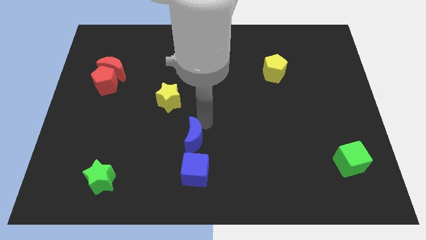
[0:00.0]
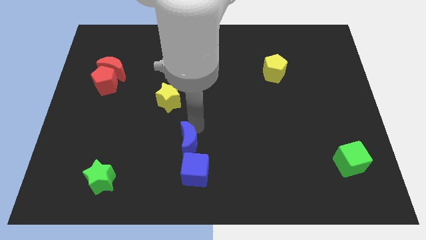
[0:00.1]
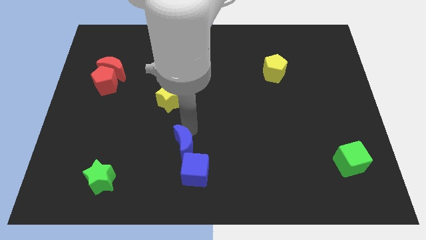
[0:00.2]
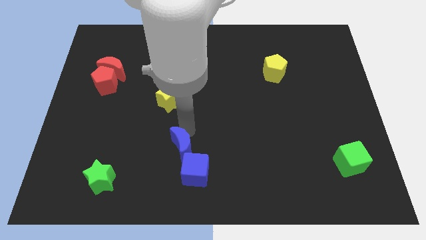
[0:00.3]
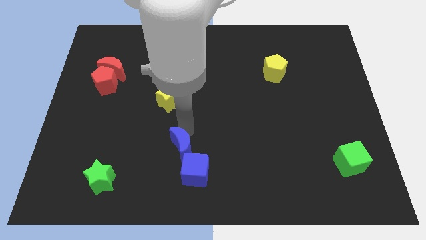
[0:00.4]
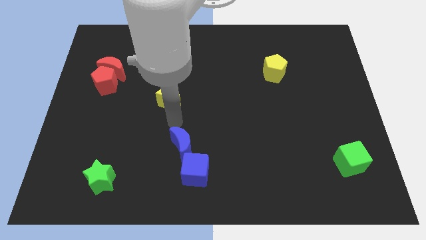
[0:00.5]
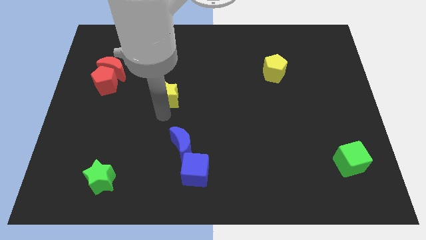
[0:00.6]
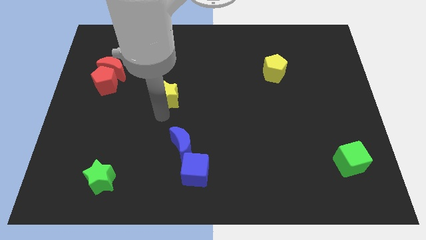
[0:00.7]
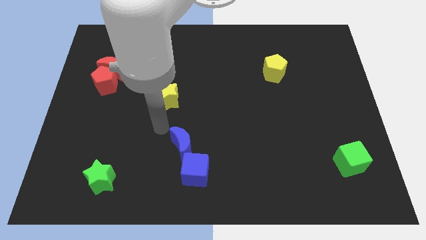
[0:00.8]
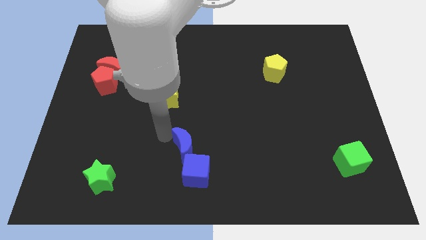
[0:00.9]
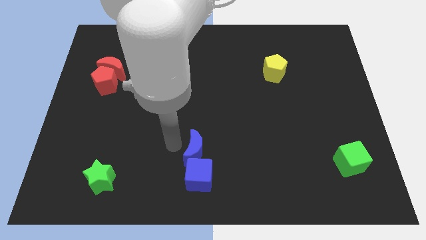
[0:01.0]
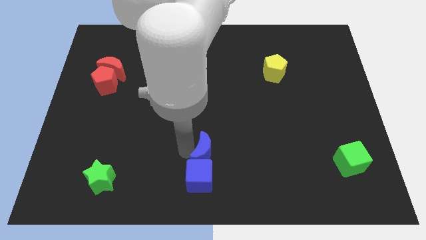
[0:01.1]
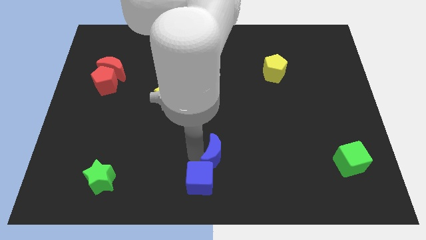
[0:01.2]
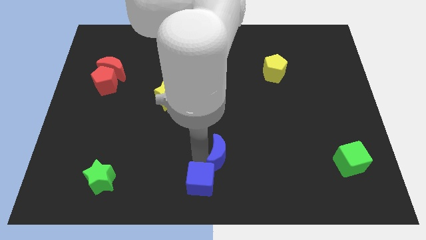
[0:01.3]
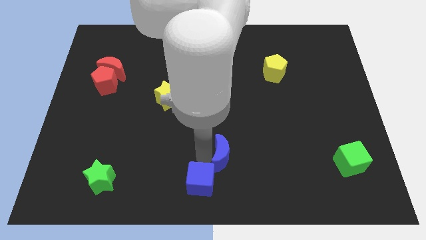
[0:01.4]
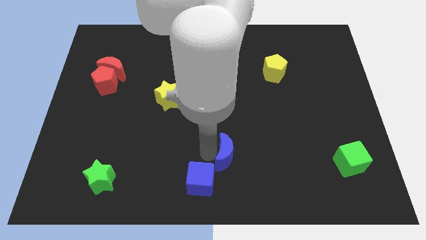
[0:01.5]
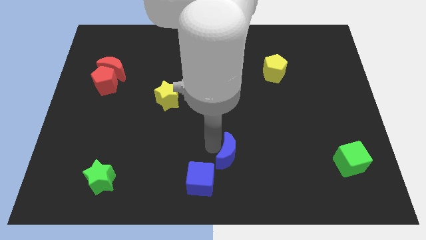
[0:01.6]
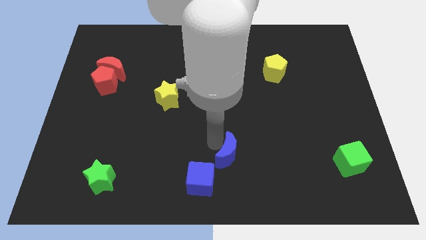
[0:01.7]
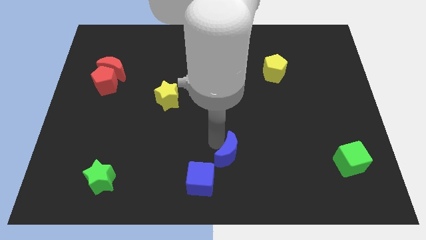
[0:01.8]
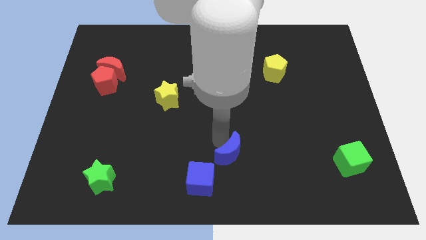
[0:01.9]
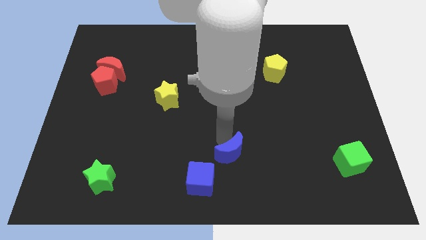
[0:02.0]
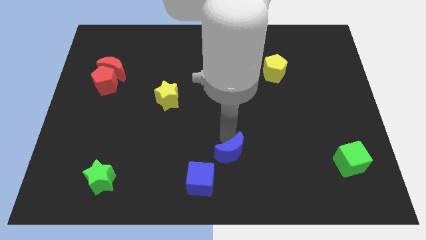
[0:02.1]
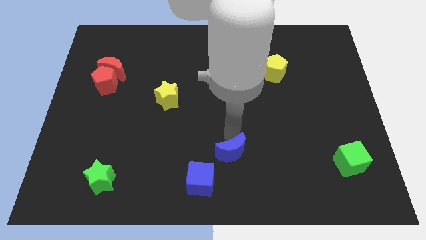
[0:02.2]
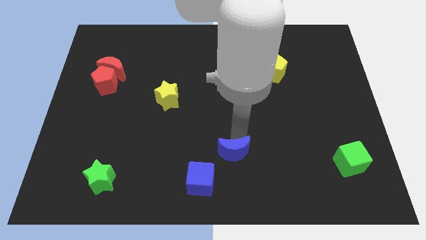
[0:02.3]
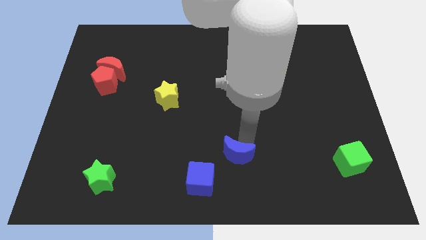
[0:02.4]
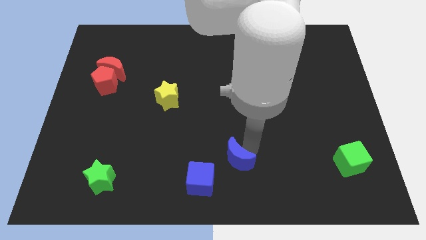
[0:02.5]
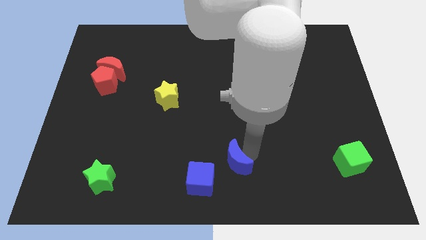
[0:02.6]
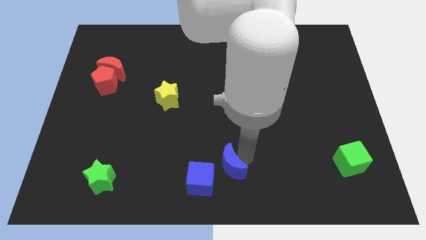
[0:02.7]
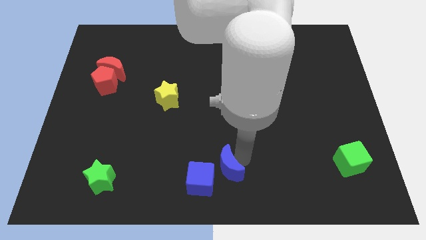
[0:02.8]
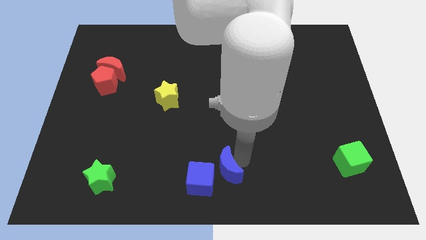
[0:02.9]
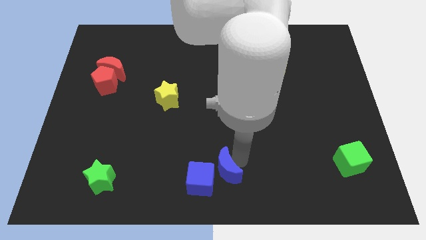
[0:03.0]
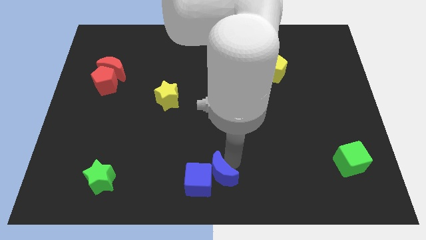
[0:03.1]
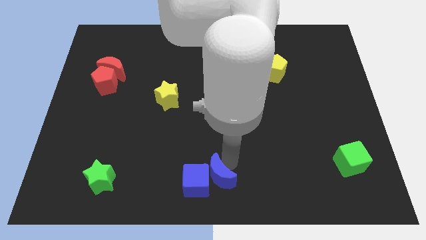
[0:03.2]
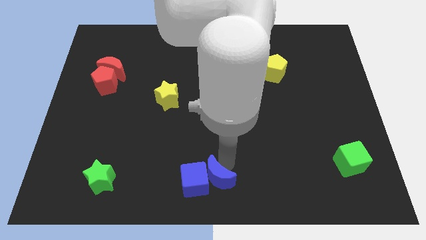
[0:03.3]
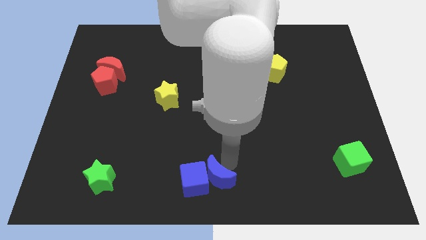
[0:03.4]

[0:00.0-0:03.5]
place the blue crescent right to the blue cube

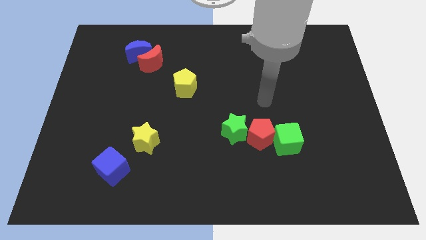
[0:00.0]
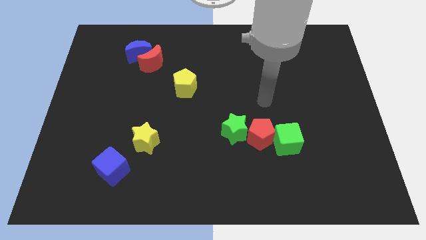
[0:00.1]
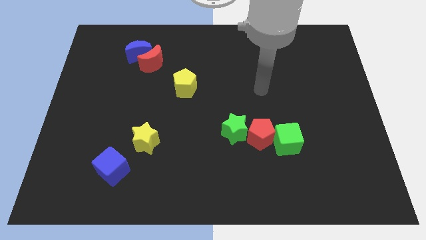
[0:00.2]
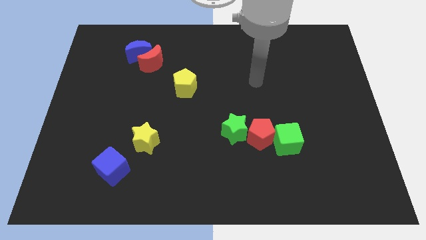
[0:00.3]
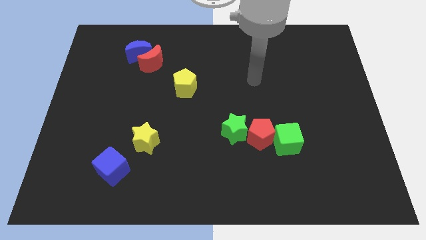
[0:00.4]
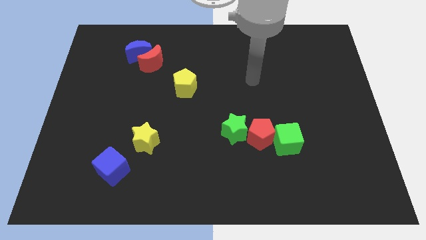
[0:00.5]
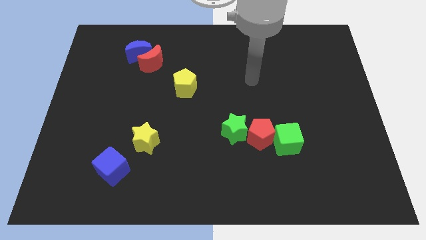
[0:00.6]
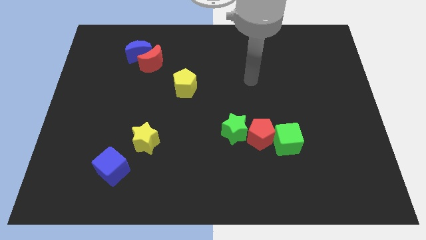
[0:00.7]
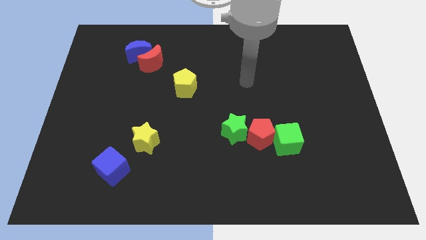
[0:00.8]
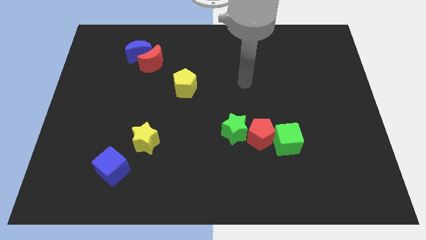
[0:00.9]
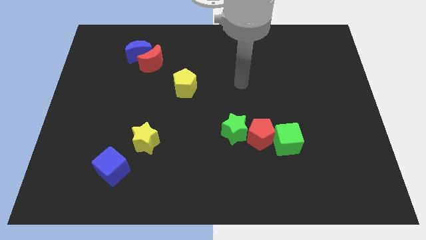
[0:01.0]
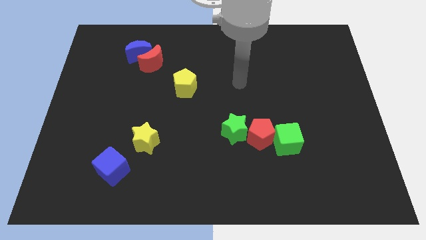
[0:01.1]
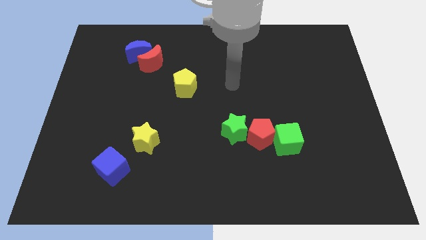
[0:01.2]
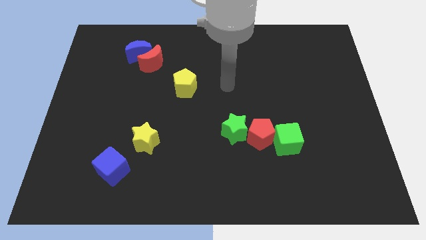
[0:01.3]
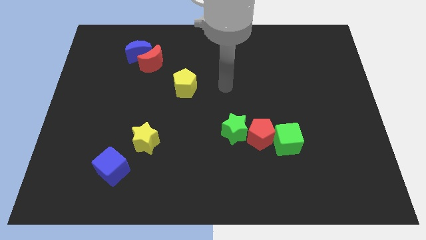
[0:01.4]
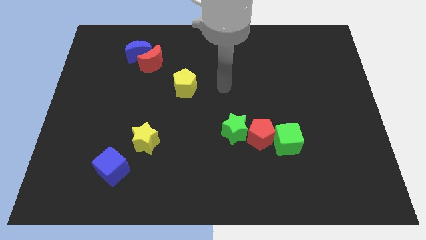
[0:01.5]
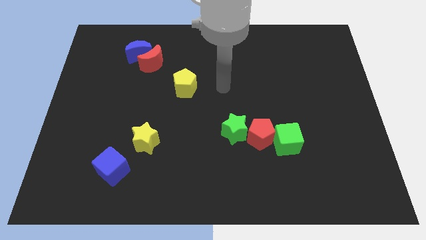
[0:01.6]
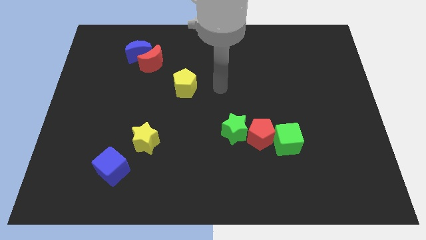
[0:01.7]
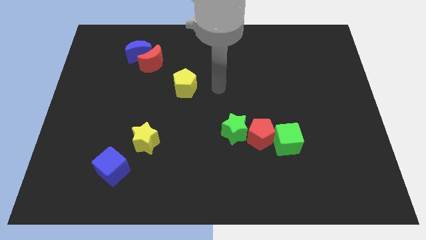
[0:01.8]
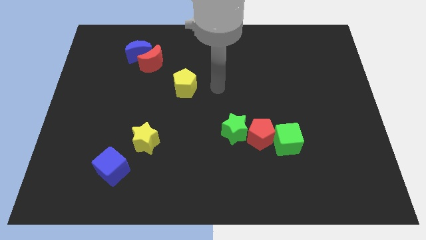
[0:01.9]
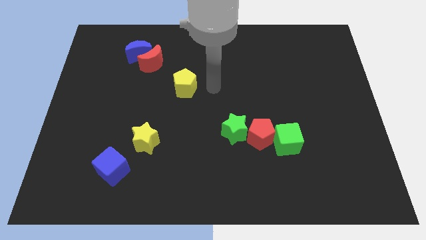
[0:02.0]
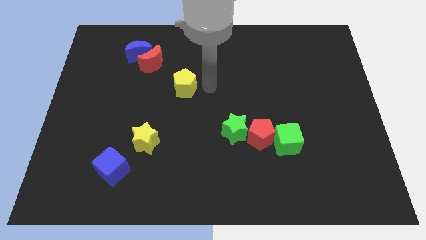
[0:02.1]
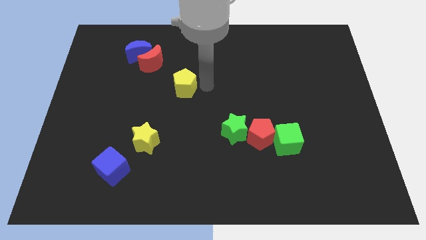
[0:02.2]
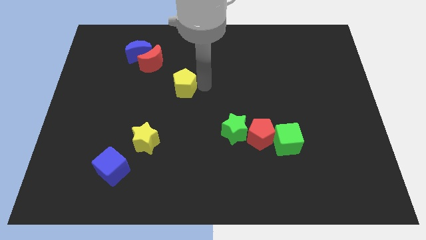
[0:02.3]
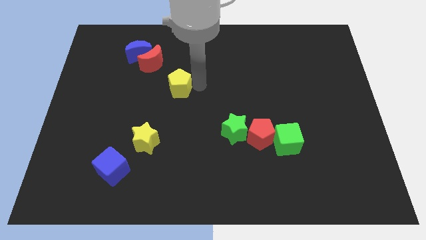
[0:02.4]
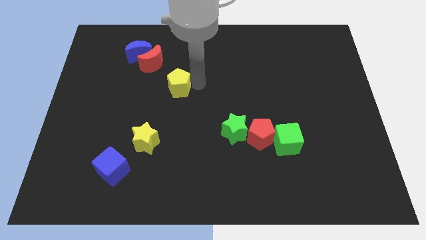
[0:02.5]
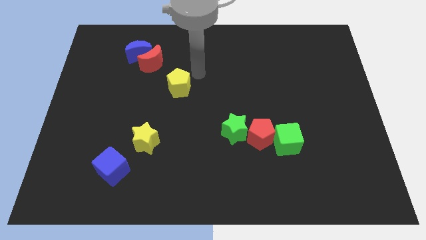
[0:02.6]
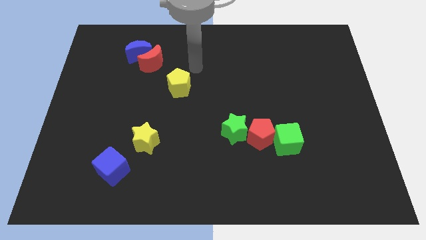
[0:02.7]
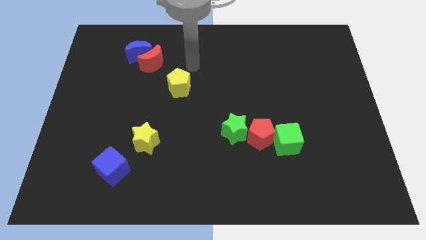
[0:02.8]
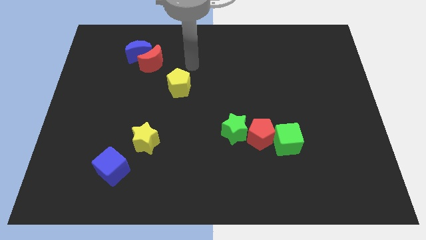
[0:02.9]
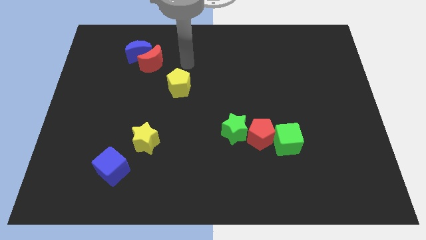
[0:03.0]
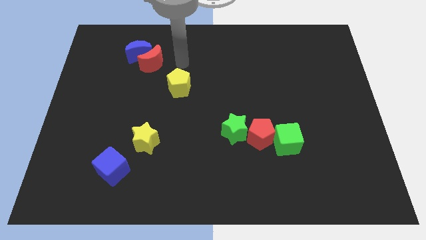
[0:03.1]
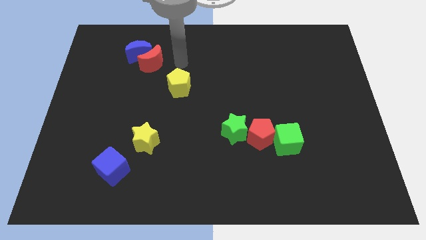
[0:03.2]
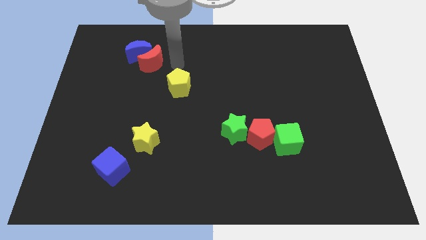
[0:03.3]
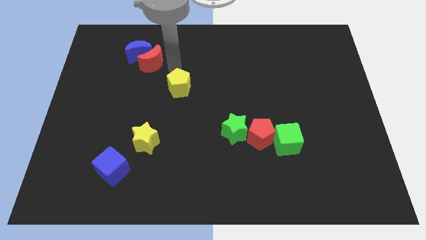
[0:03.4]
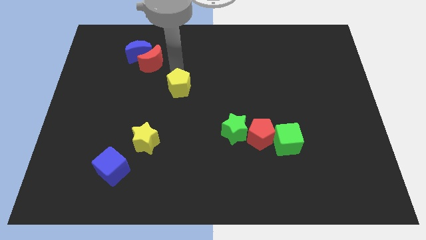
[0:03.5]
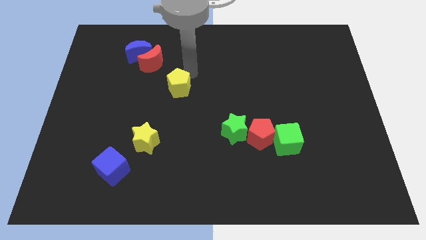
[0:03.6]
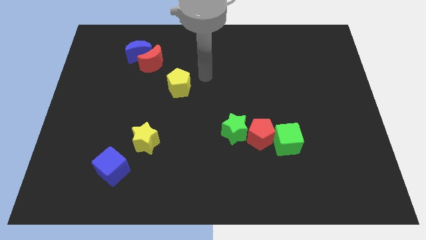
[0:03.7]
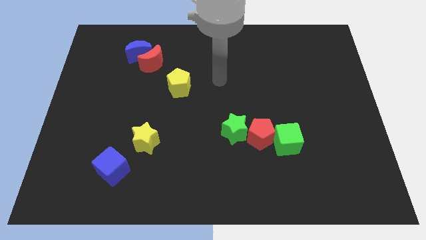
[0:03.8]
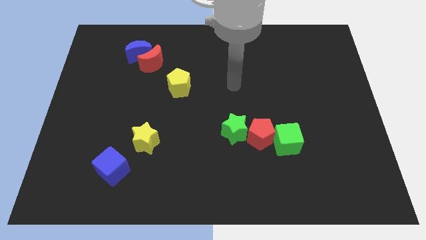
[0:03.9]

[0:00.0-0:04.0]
push the yellow pentagon slightly to the left side of the board

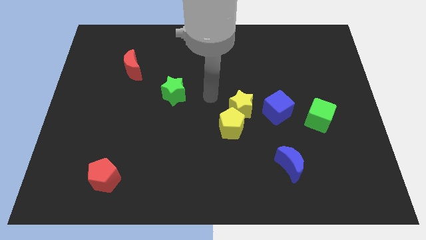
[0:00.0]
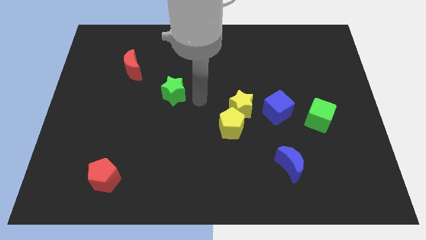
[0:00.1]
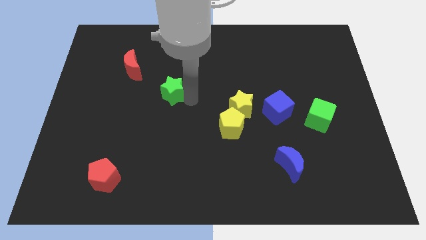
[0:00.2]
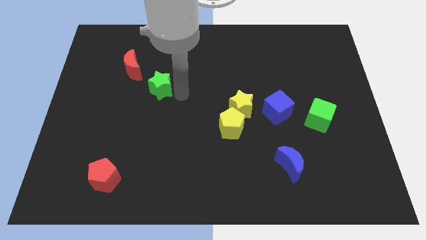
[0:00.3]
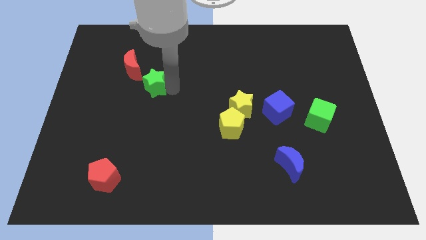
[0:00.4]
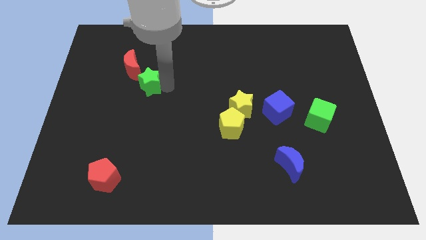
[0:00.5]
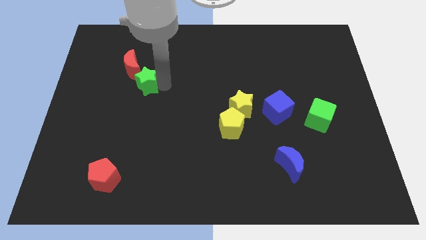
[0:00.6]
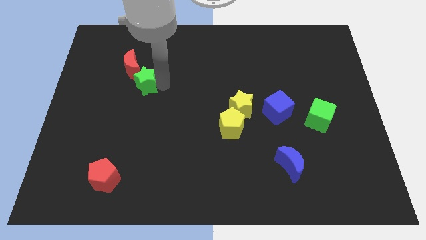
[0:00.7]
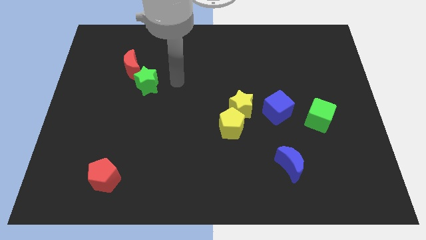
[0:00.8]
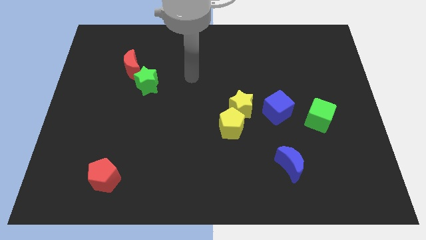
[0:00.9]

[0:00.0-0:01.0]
move the green star below the red crescent

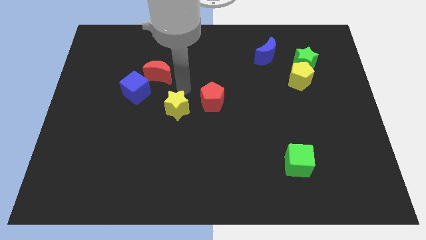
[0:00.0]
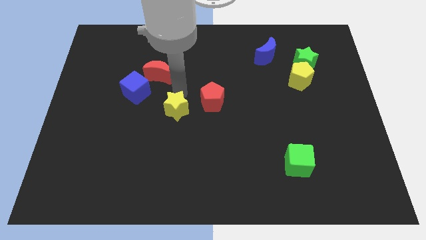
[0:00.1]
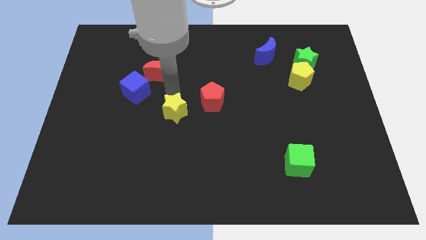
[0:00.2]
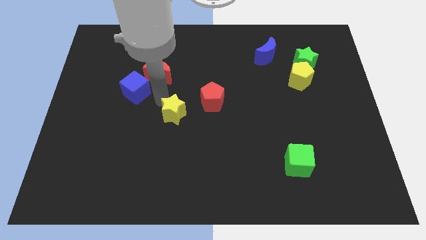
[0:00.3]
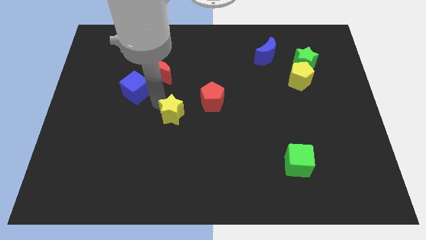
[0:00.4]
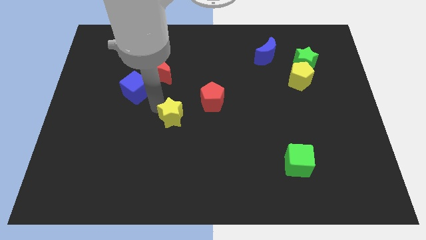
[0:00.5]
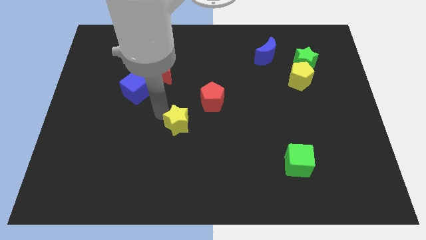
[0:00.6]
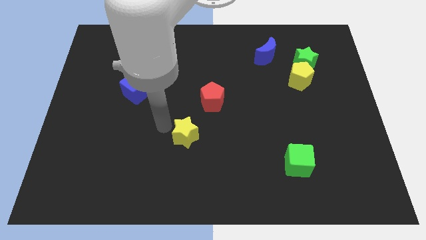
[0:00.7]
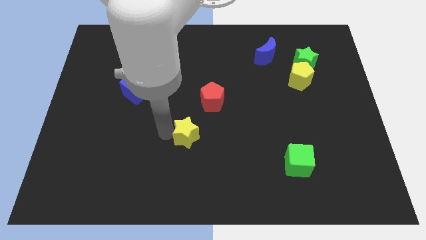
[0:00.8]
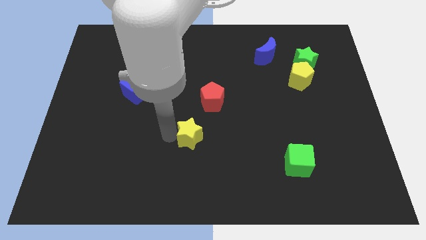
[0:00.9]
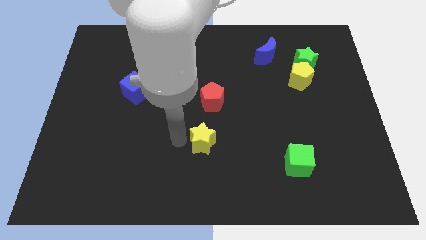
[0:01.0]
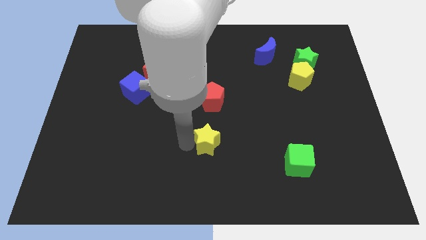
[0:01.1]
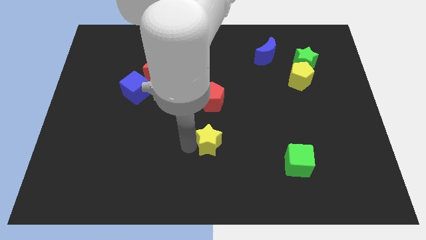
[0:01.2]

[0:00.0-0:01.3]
place the yellow star parallel to the red pentagon bottom side
